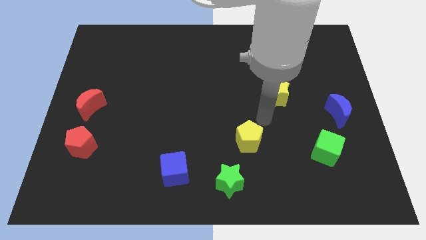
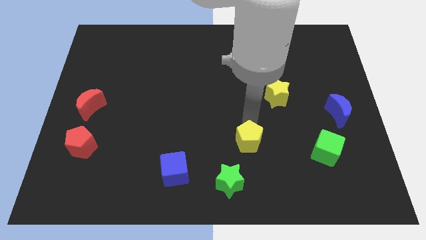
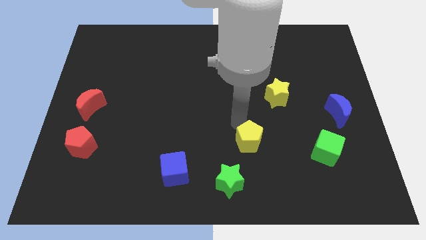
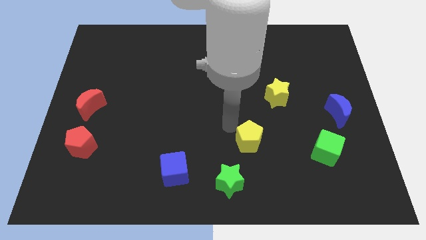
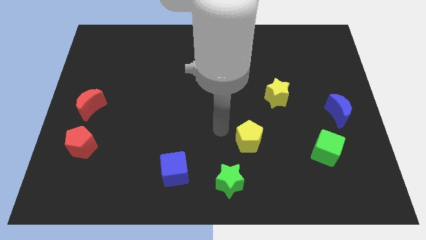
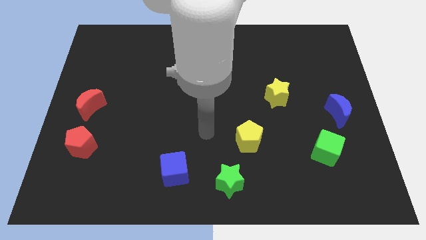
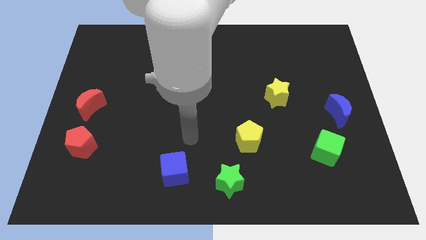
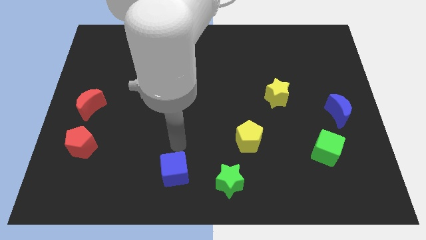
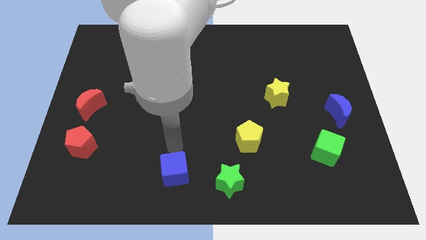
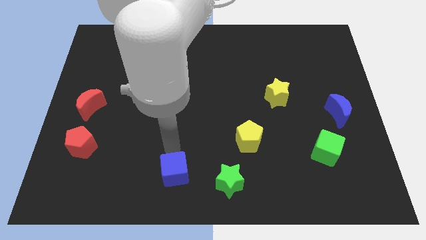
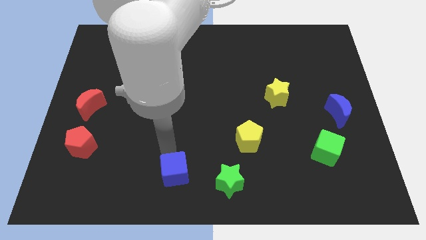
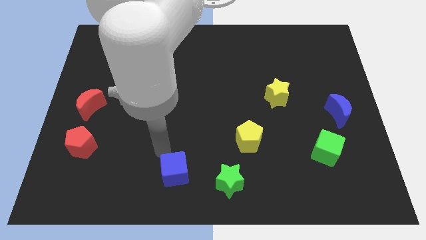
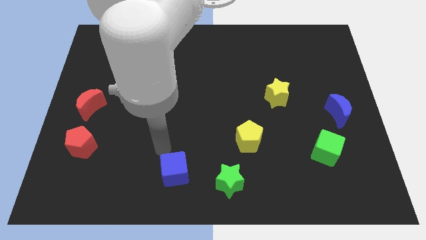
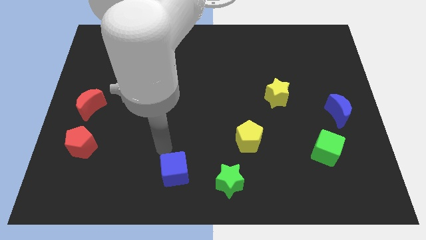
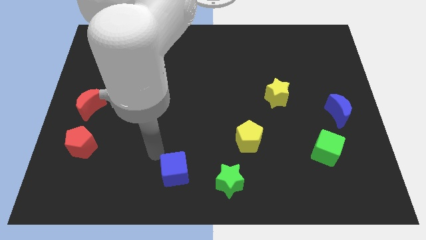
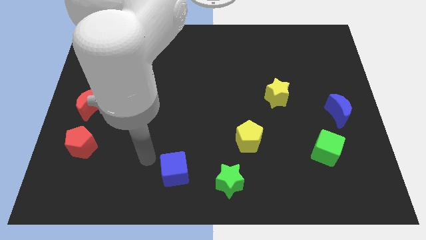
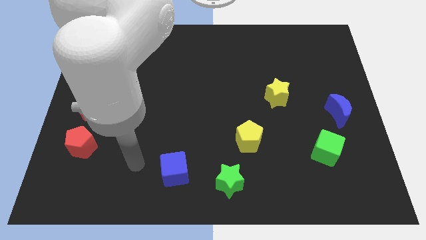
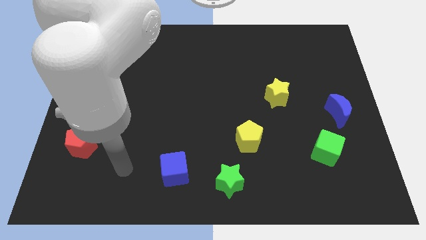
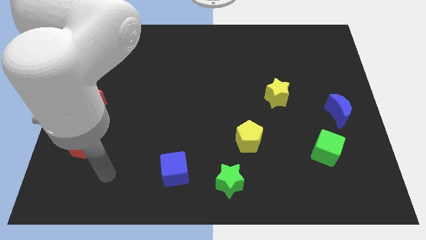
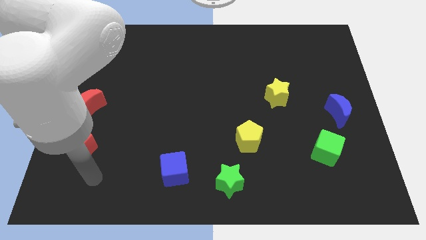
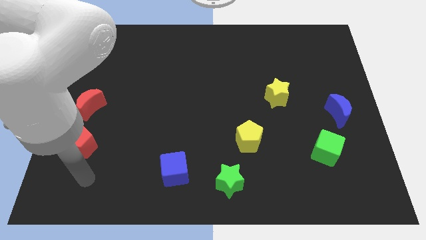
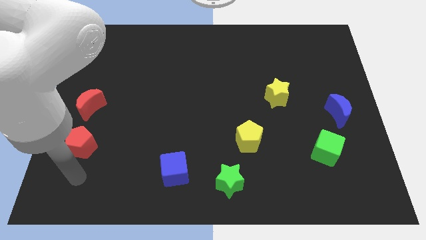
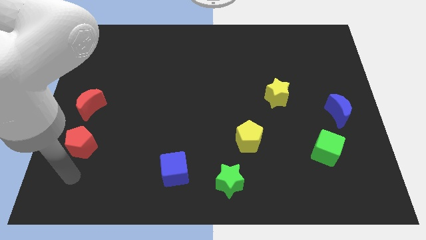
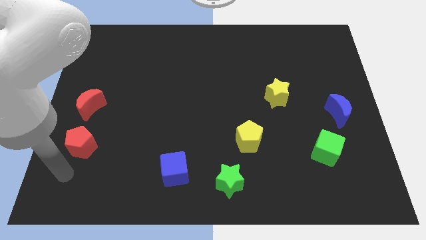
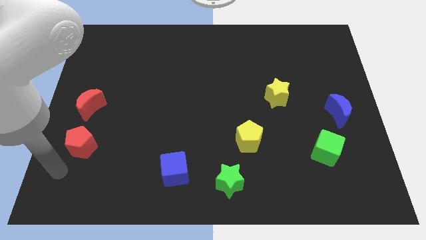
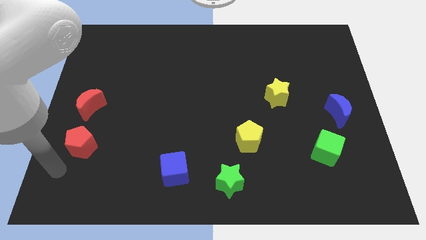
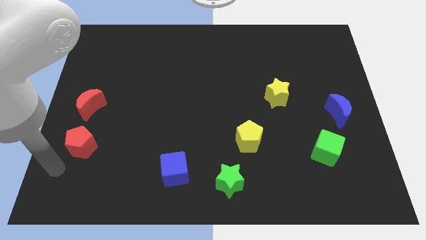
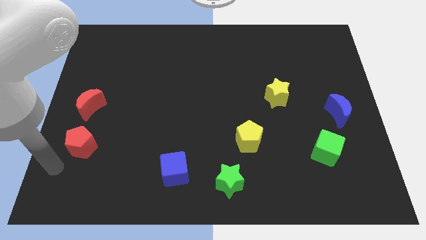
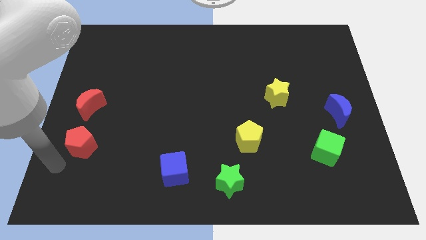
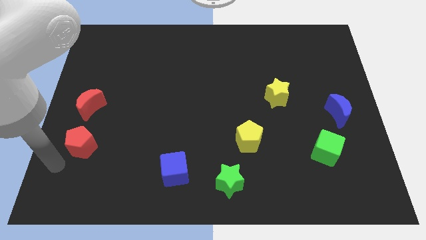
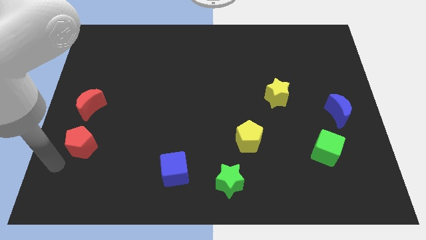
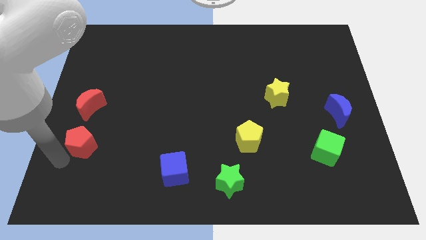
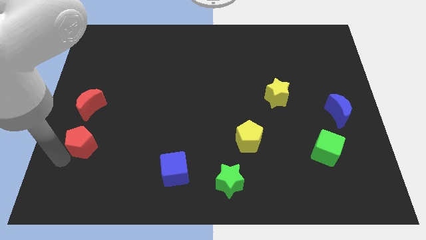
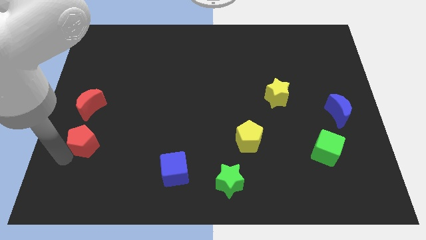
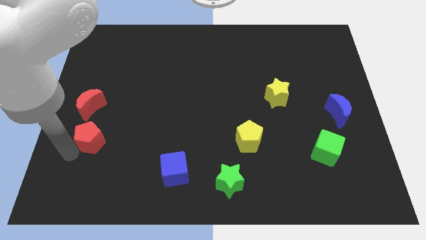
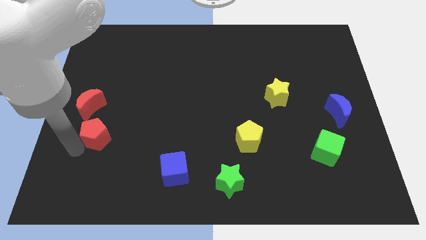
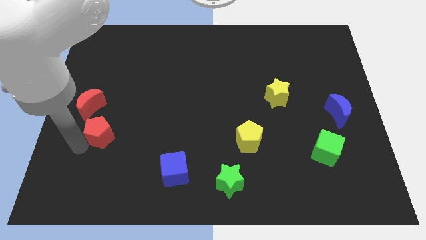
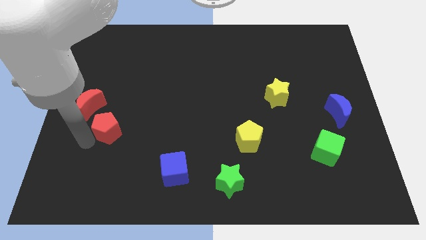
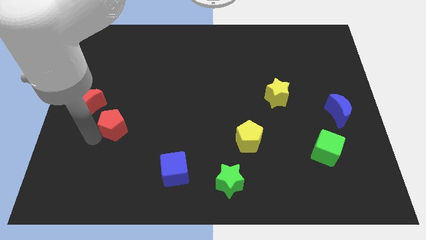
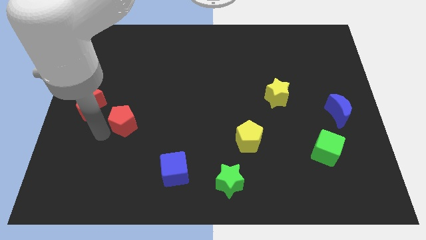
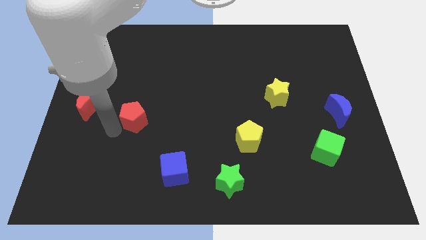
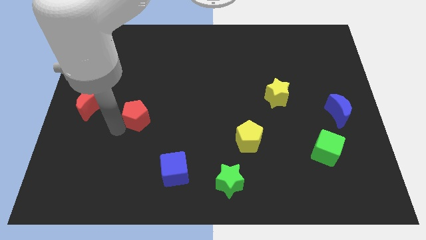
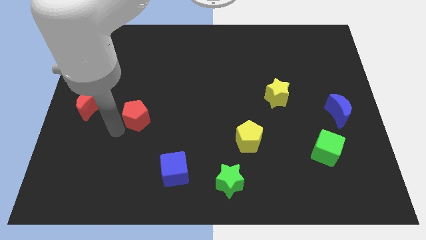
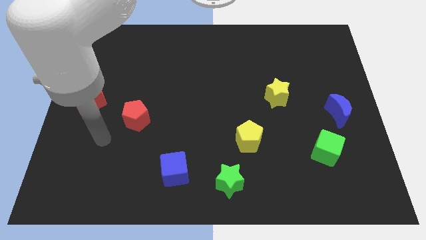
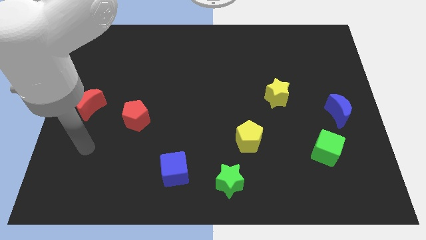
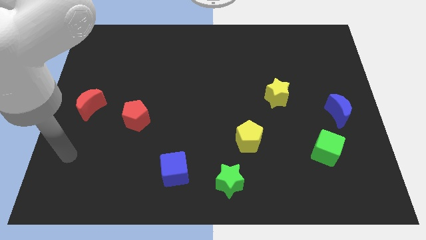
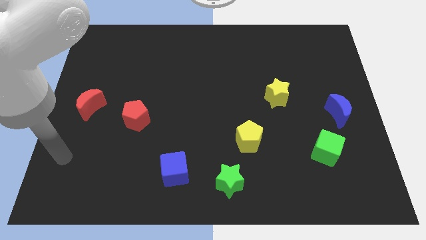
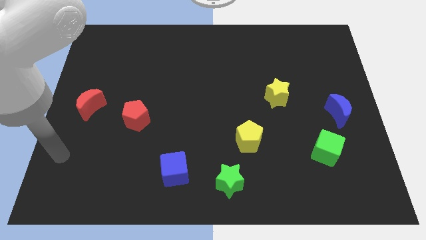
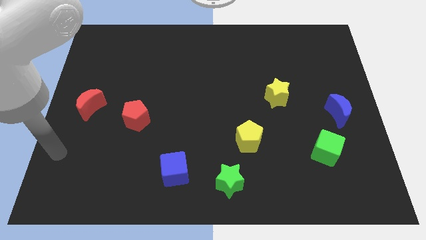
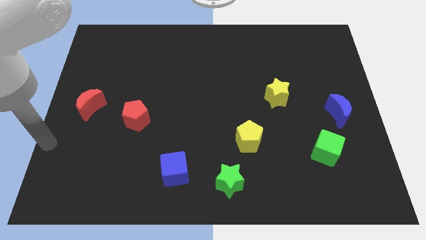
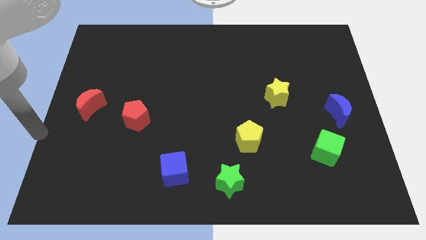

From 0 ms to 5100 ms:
place the red pentagon in between the yellow pentagon and red moon

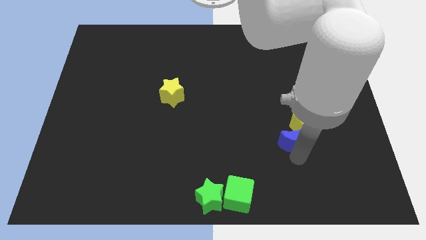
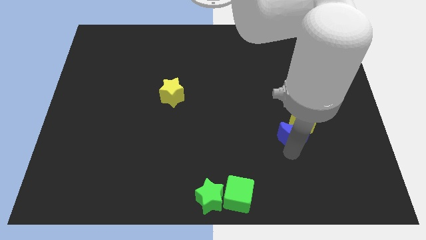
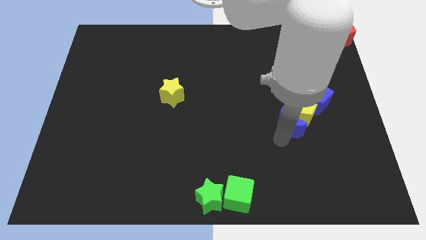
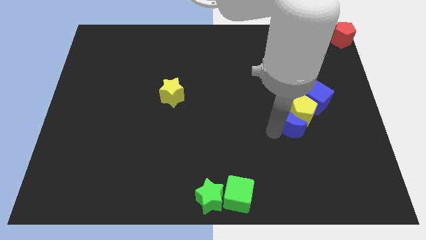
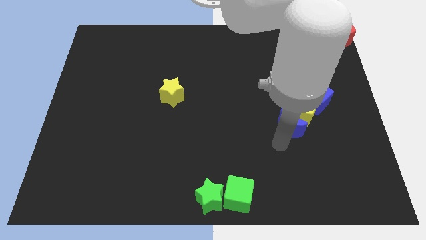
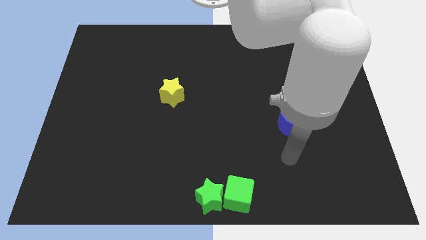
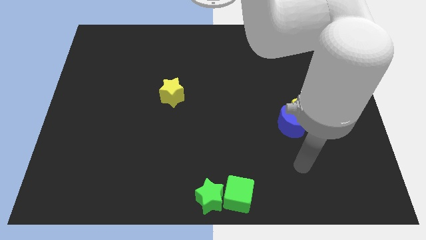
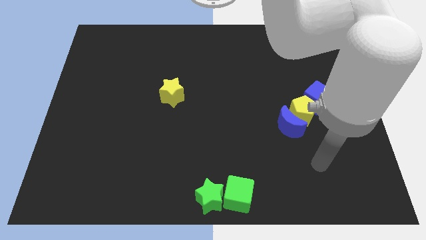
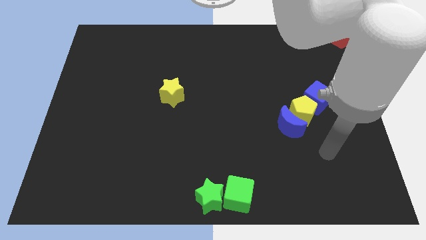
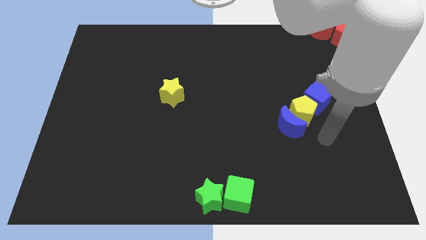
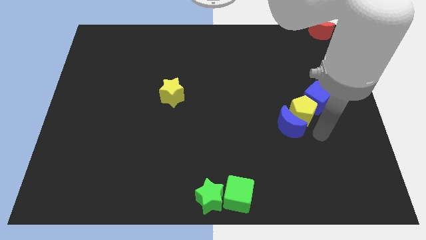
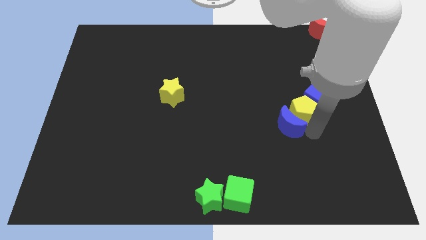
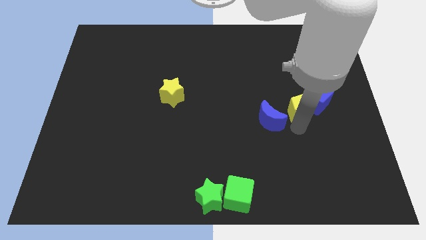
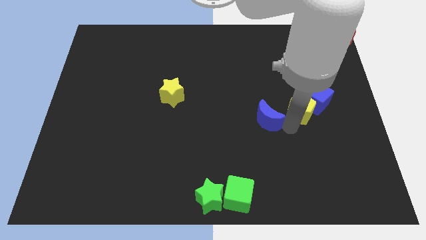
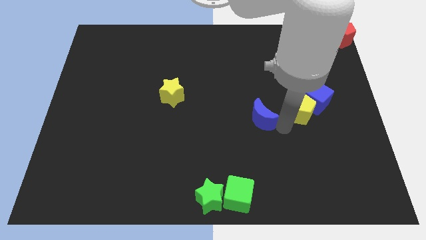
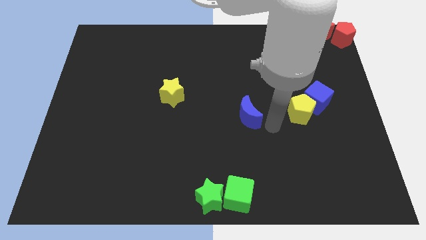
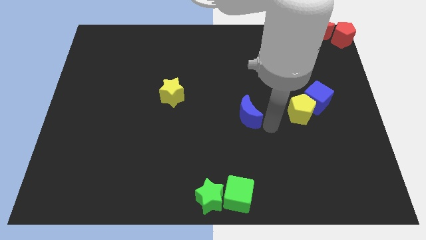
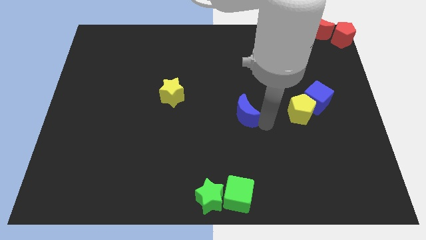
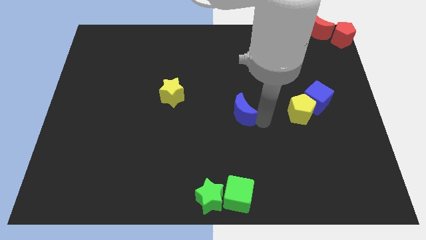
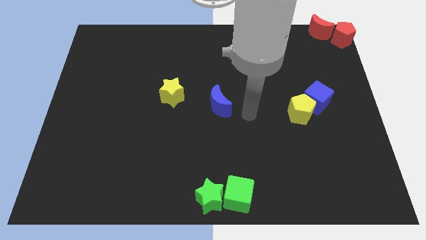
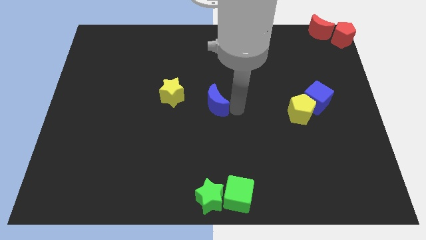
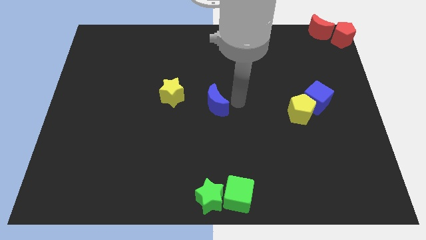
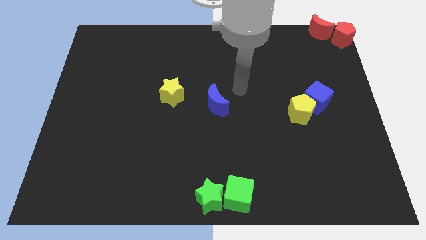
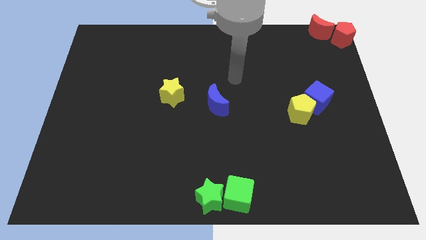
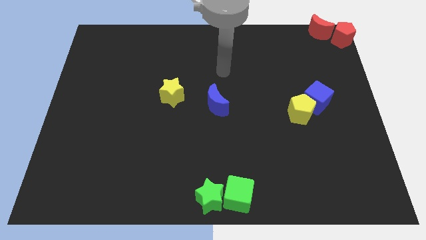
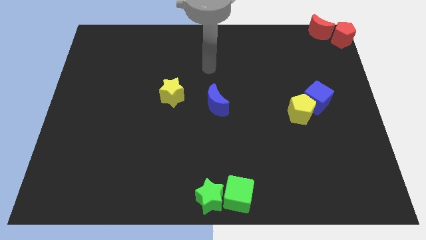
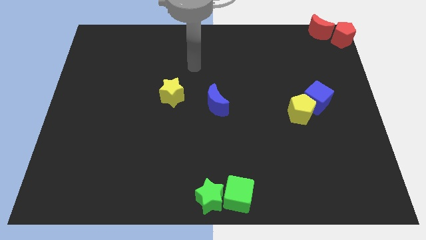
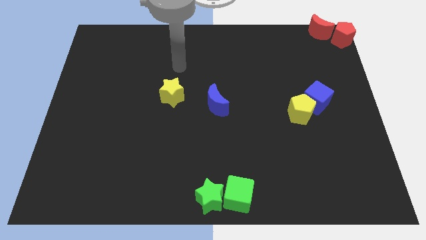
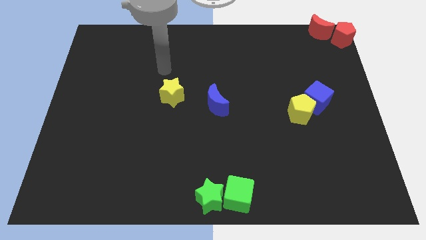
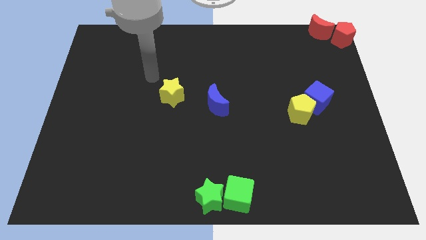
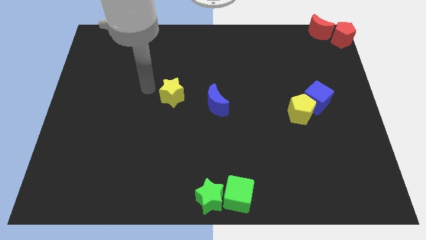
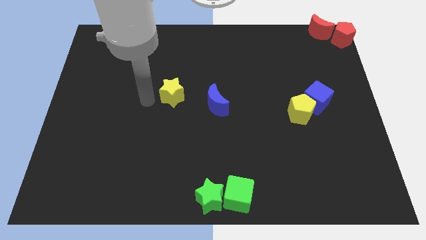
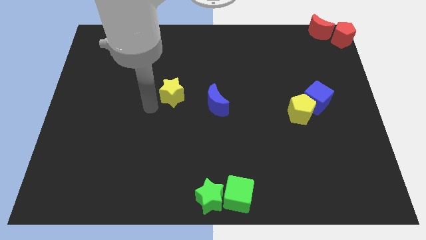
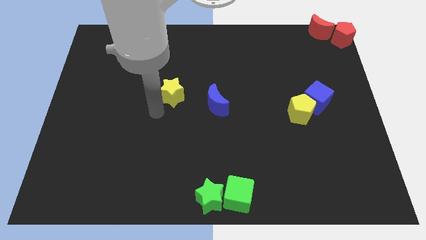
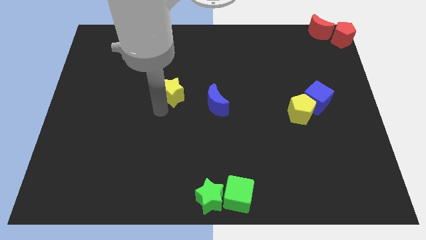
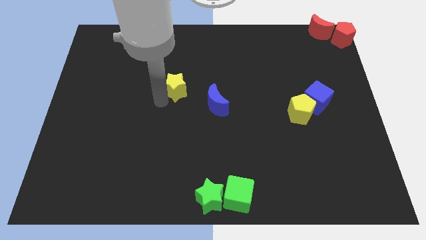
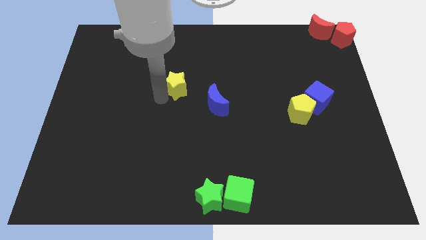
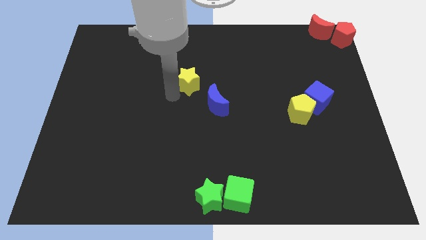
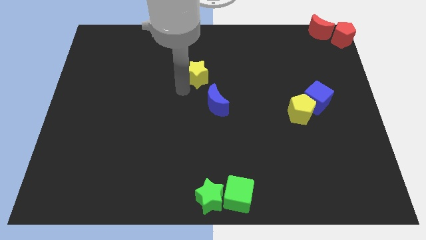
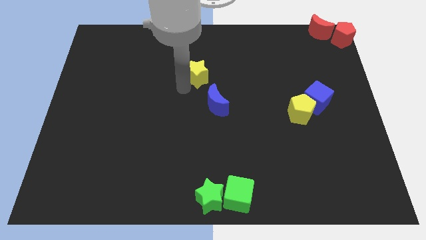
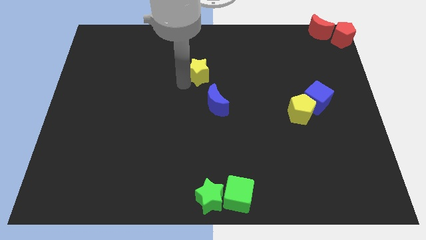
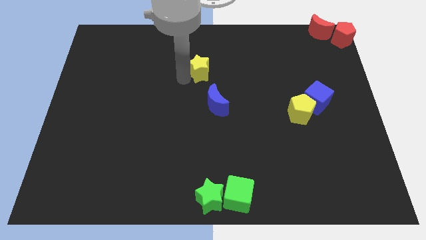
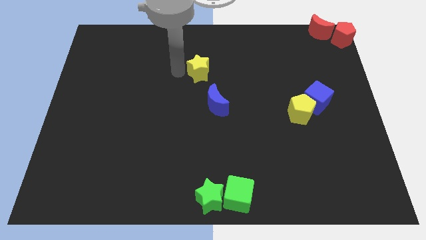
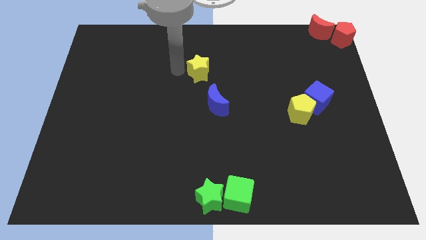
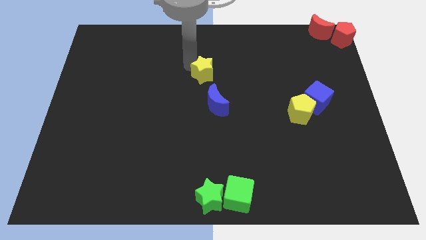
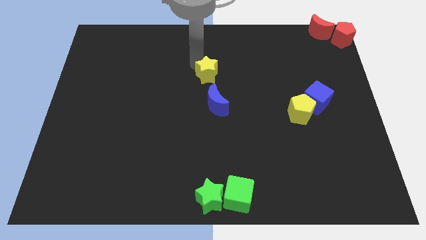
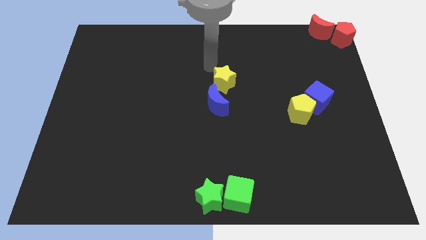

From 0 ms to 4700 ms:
move the yellow star above blue crescent
